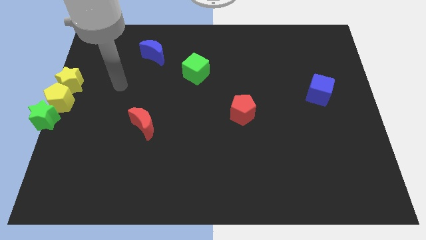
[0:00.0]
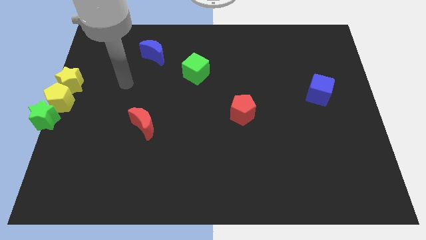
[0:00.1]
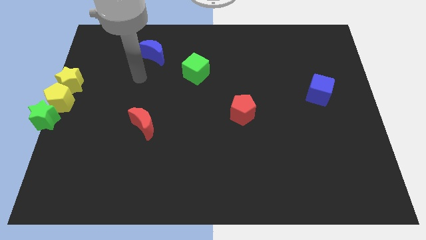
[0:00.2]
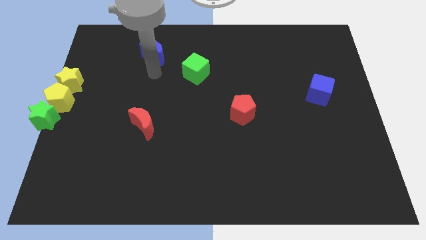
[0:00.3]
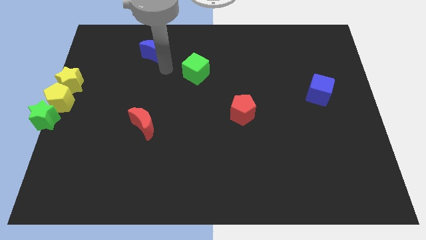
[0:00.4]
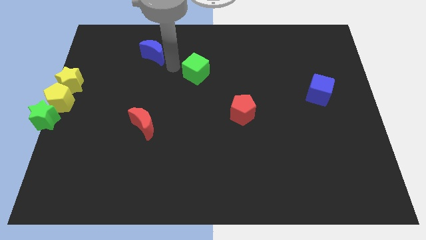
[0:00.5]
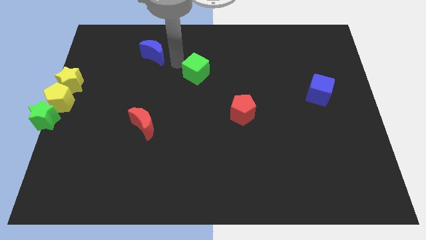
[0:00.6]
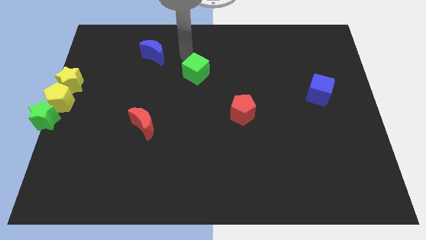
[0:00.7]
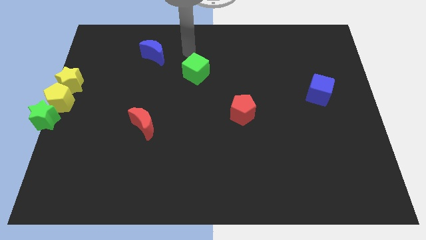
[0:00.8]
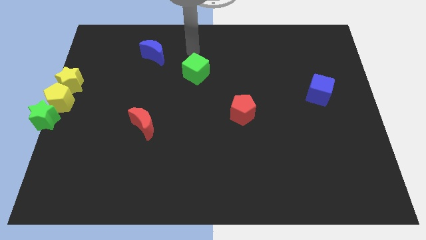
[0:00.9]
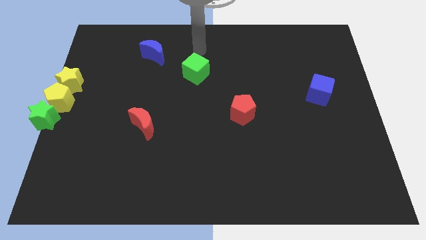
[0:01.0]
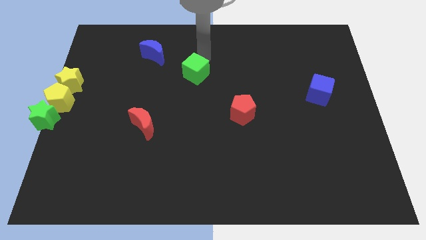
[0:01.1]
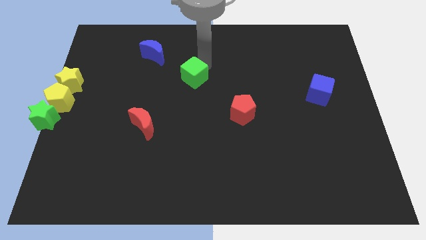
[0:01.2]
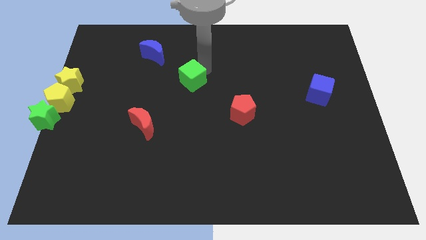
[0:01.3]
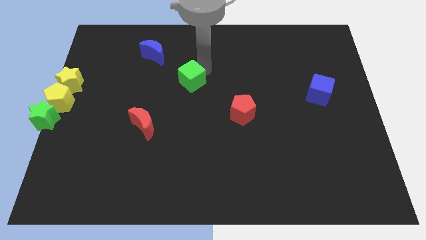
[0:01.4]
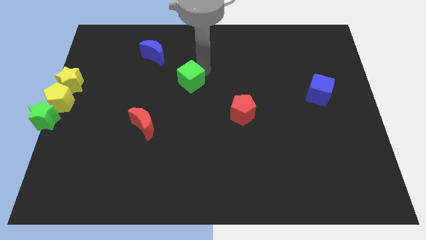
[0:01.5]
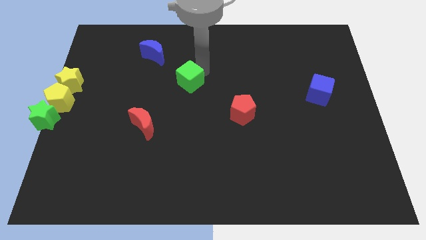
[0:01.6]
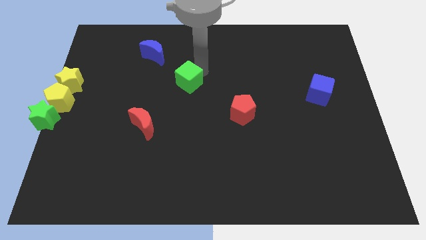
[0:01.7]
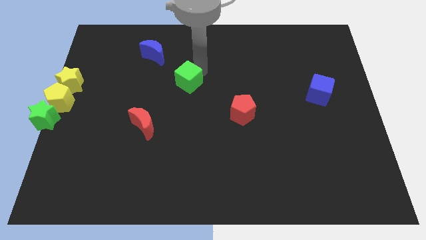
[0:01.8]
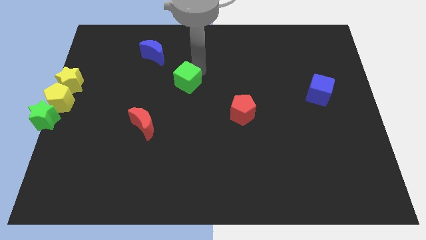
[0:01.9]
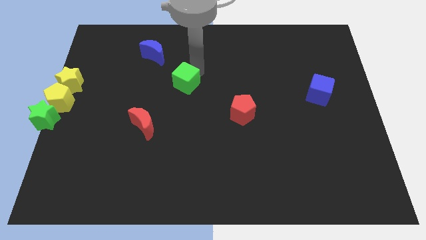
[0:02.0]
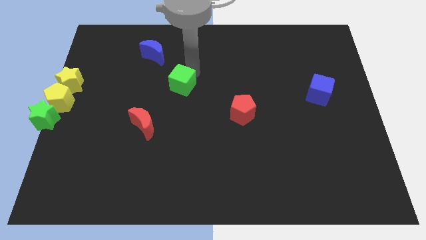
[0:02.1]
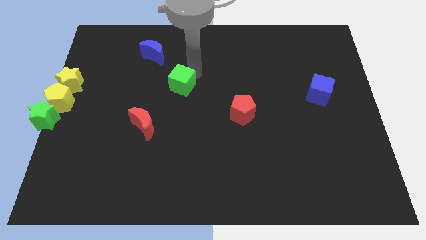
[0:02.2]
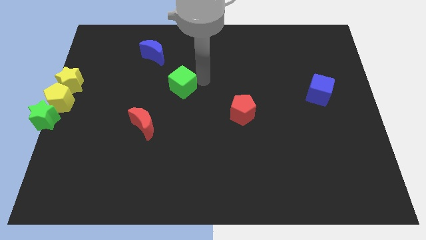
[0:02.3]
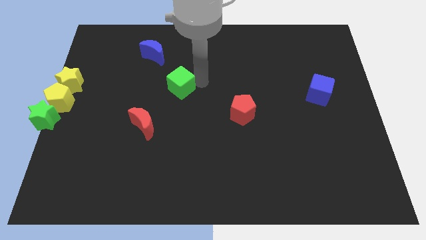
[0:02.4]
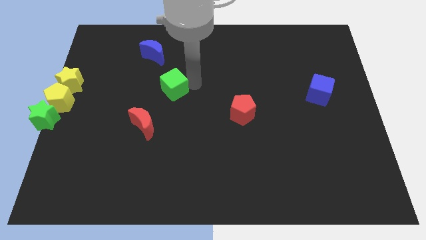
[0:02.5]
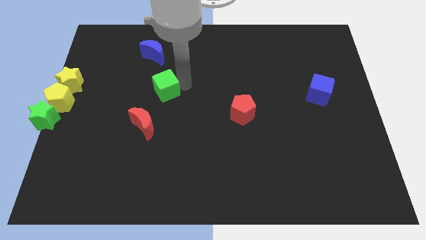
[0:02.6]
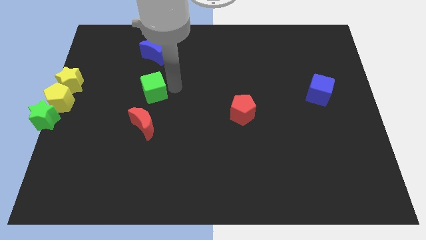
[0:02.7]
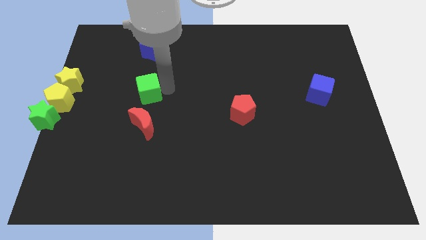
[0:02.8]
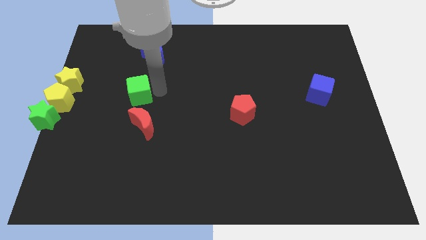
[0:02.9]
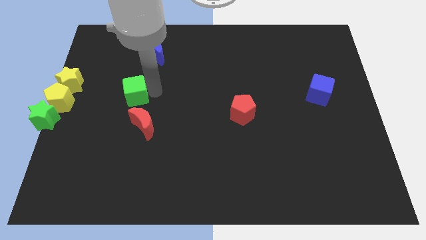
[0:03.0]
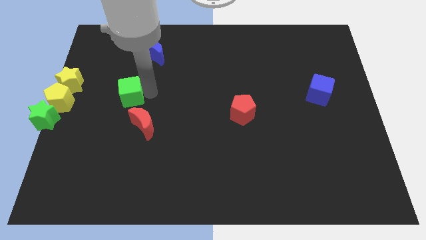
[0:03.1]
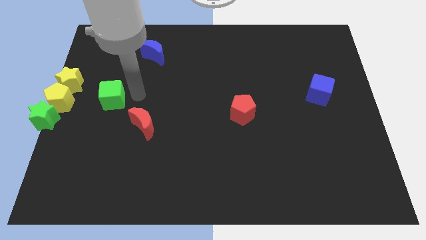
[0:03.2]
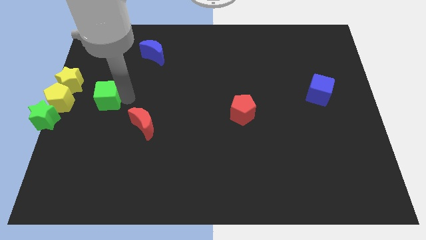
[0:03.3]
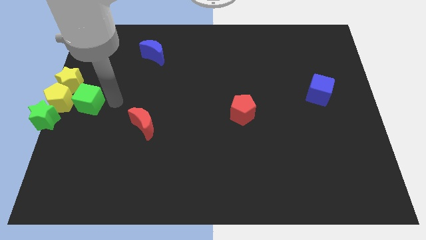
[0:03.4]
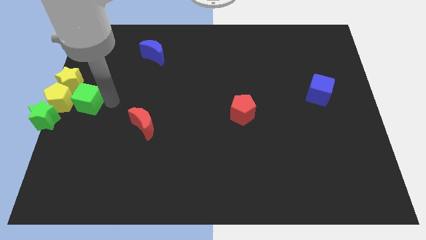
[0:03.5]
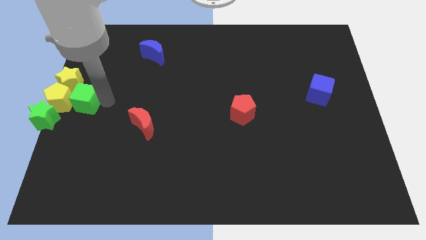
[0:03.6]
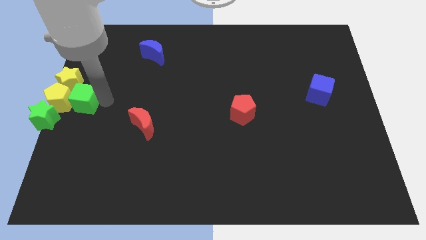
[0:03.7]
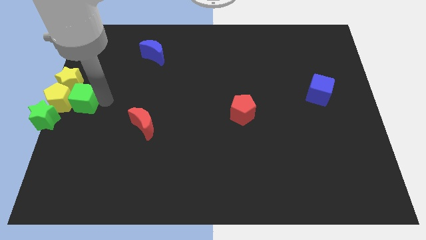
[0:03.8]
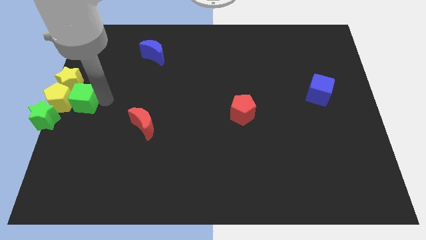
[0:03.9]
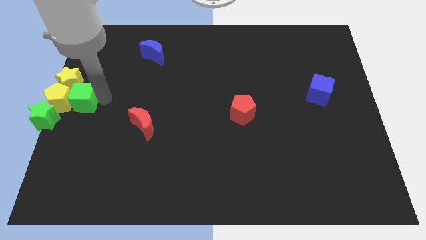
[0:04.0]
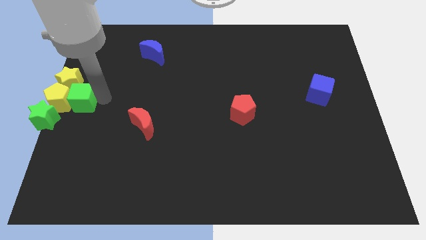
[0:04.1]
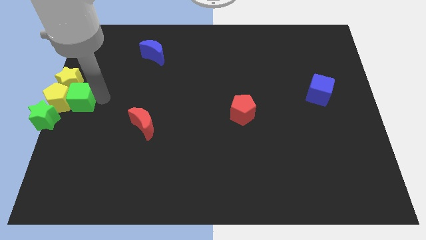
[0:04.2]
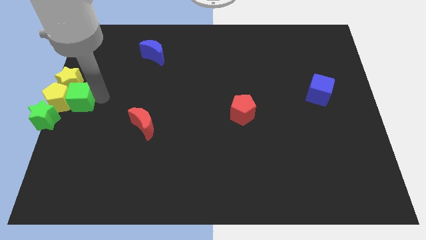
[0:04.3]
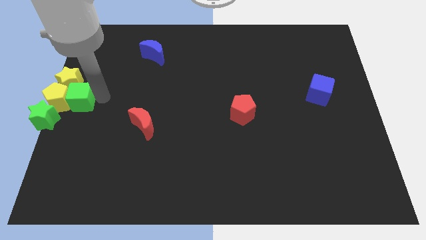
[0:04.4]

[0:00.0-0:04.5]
push the green cube into the yellow pentagon

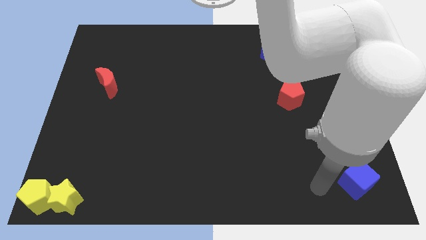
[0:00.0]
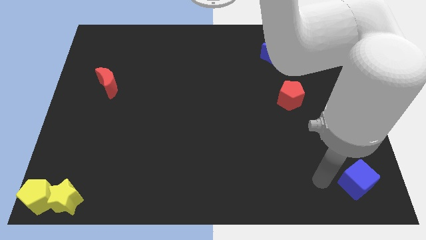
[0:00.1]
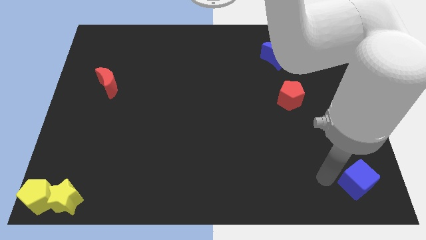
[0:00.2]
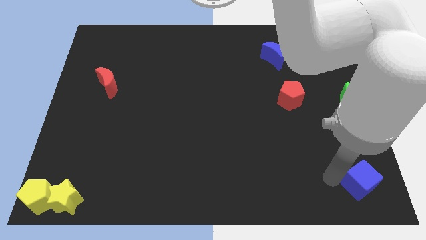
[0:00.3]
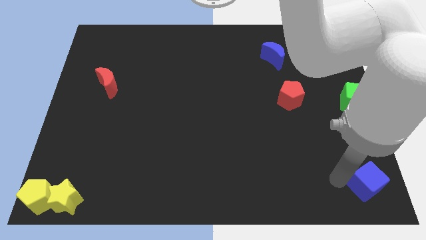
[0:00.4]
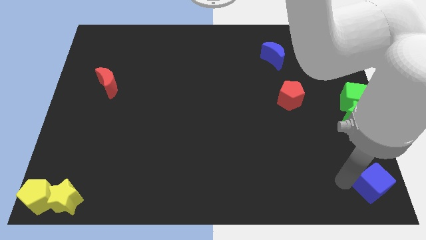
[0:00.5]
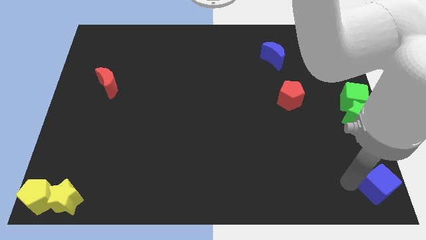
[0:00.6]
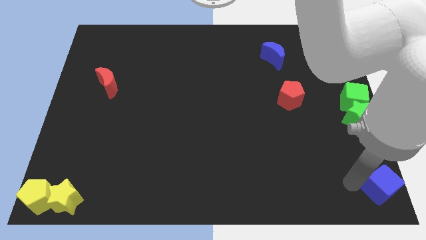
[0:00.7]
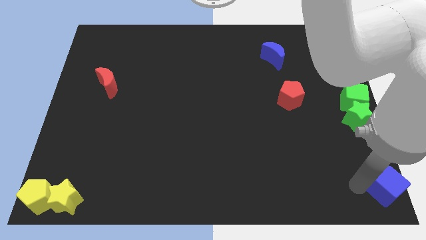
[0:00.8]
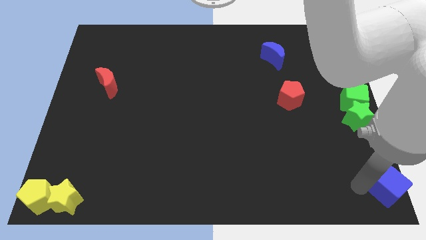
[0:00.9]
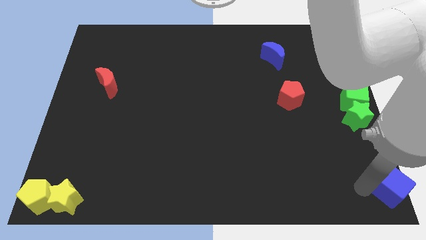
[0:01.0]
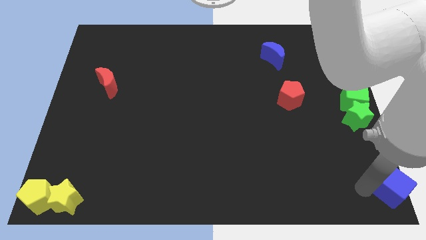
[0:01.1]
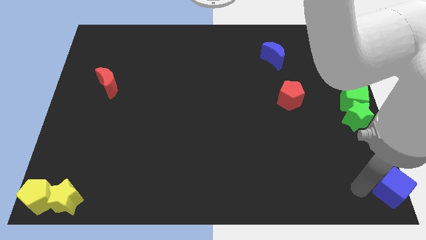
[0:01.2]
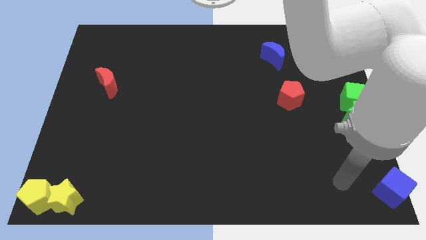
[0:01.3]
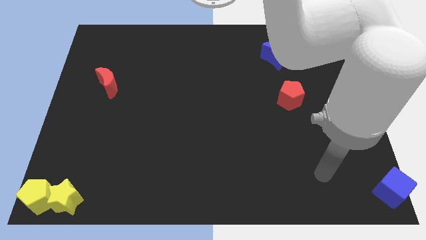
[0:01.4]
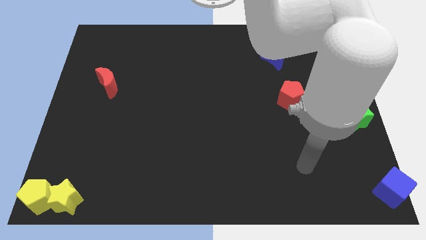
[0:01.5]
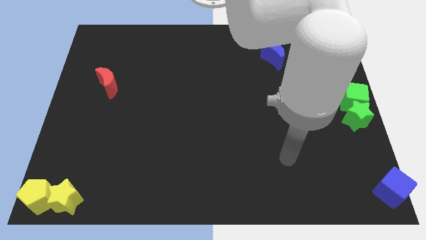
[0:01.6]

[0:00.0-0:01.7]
put the blue cube at the bottom right corner of the board

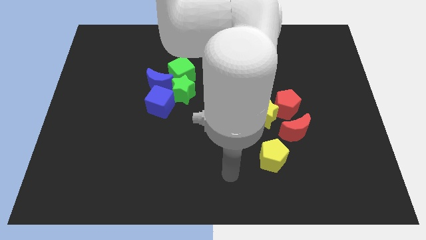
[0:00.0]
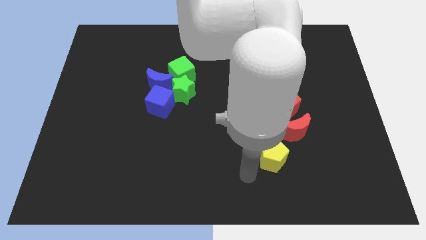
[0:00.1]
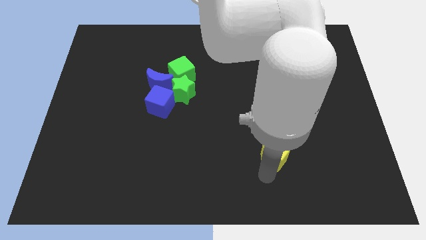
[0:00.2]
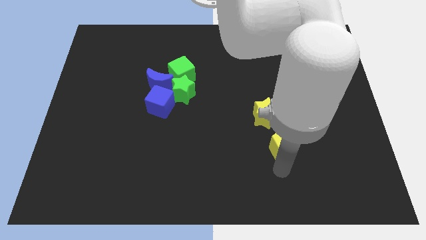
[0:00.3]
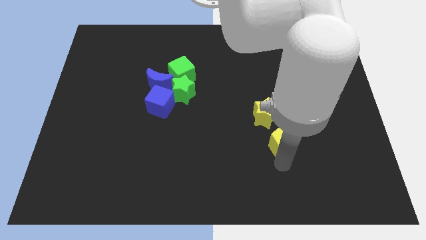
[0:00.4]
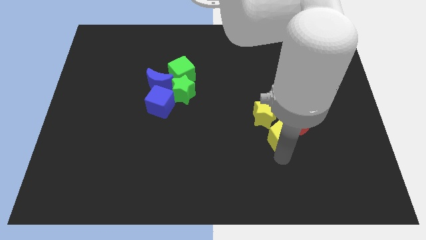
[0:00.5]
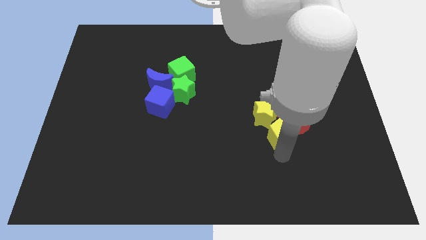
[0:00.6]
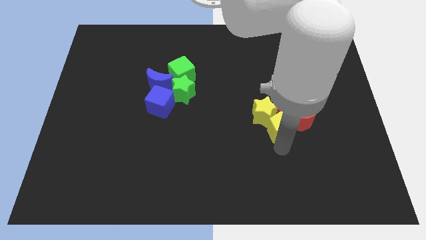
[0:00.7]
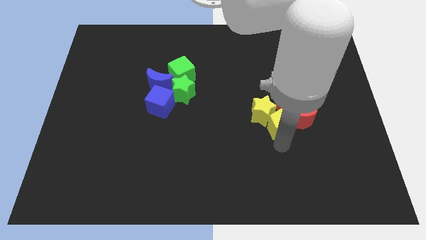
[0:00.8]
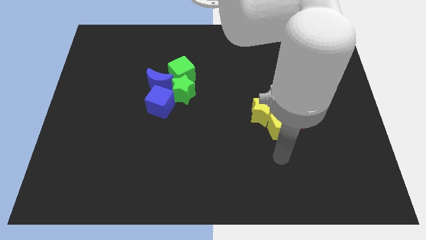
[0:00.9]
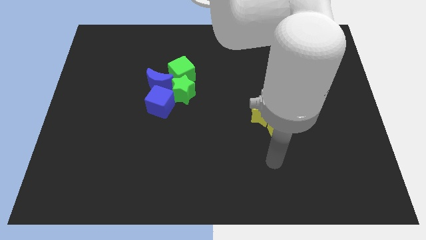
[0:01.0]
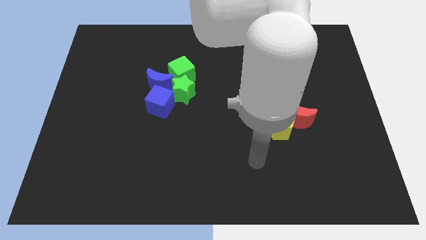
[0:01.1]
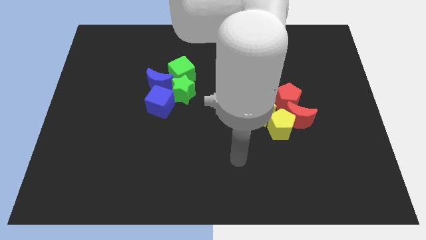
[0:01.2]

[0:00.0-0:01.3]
push the yellow pentagon slightly towards up

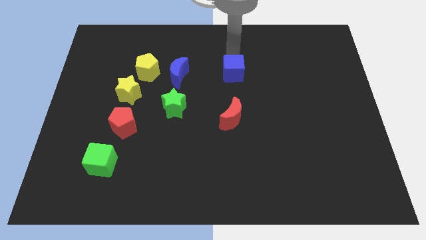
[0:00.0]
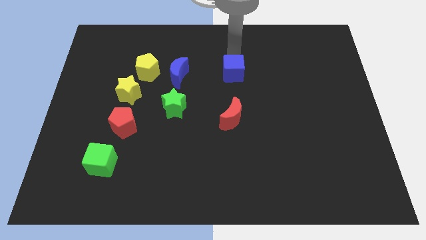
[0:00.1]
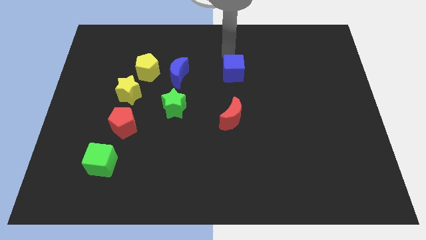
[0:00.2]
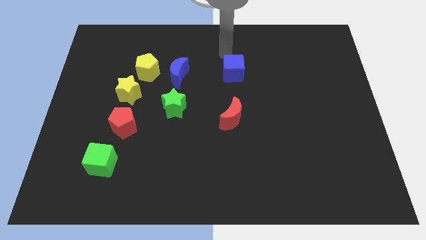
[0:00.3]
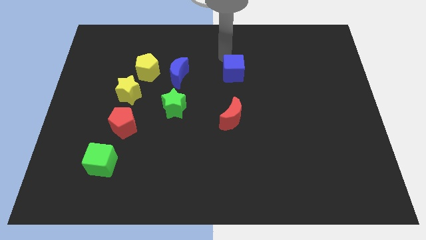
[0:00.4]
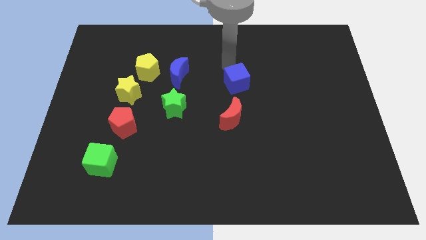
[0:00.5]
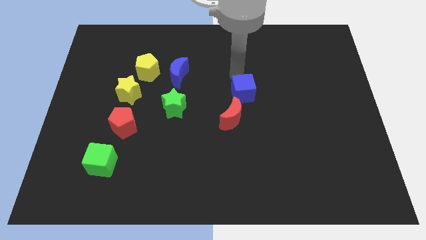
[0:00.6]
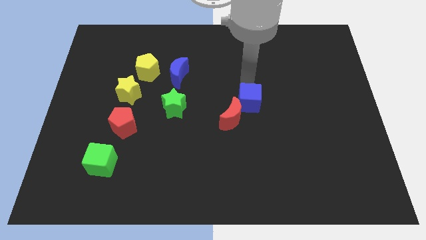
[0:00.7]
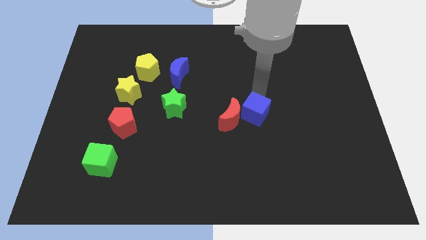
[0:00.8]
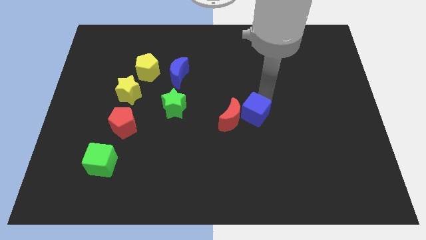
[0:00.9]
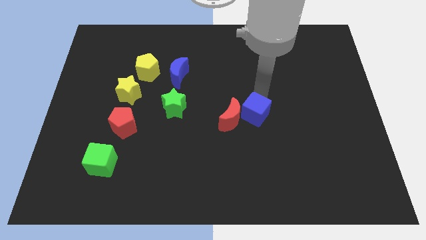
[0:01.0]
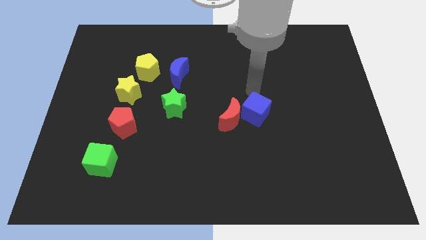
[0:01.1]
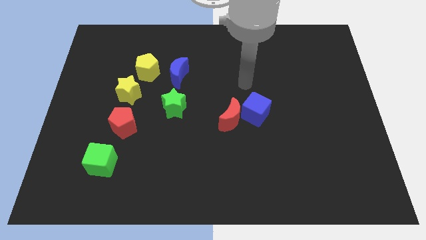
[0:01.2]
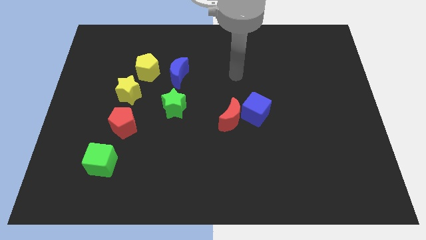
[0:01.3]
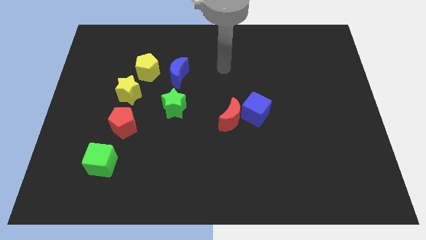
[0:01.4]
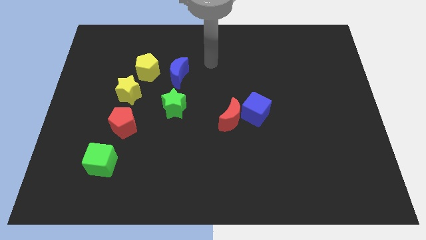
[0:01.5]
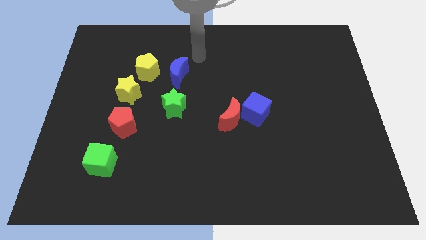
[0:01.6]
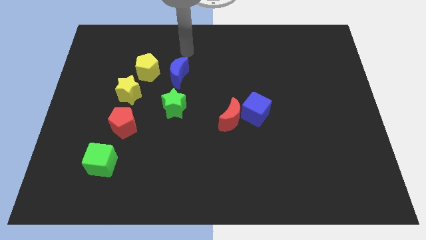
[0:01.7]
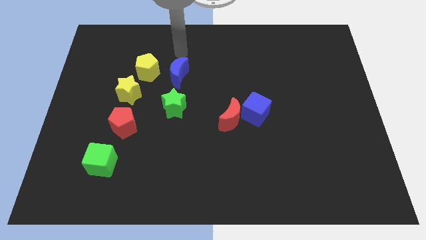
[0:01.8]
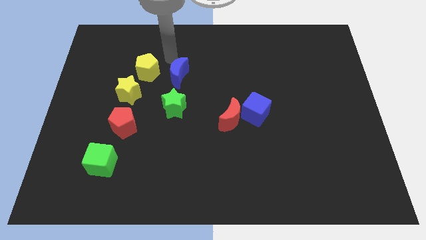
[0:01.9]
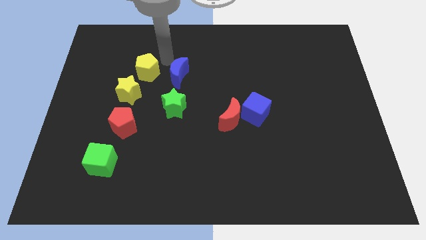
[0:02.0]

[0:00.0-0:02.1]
move blue cube right to the red crescent
